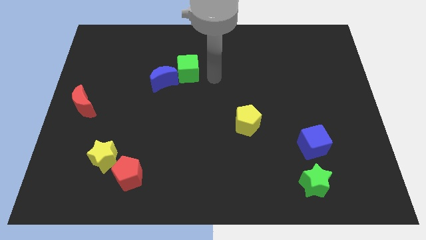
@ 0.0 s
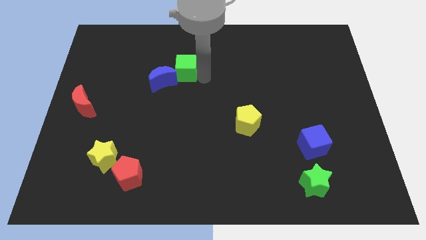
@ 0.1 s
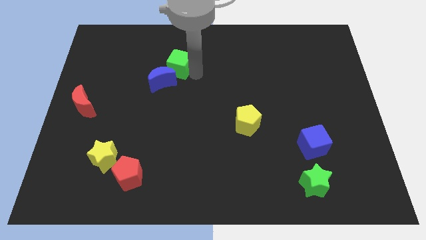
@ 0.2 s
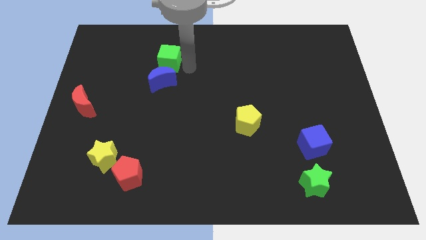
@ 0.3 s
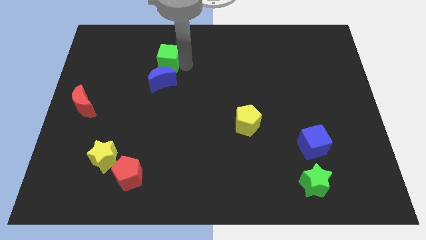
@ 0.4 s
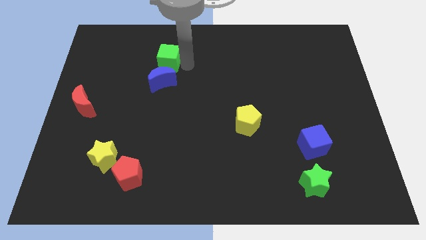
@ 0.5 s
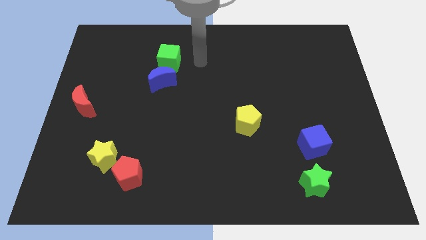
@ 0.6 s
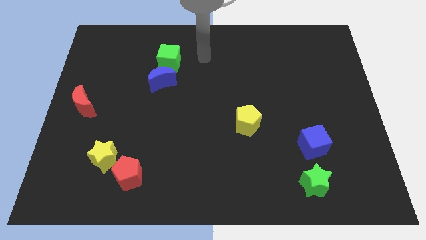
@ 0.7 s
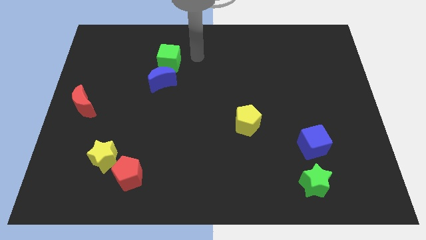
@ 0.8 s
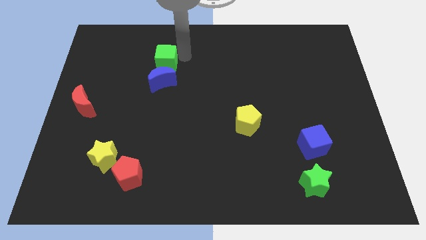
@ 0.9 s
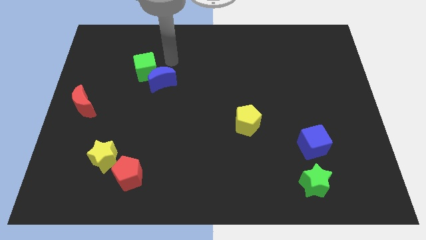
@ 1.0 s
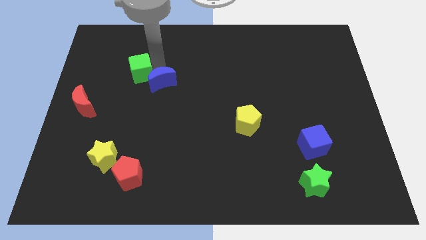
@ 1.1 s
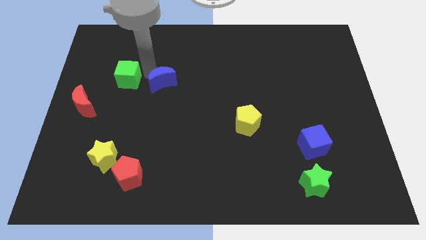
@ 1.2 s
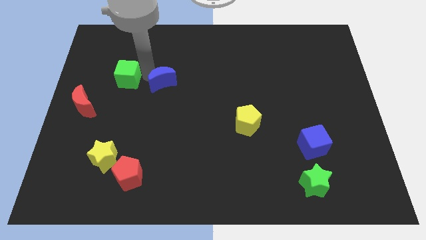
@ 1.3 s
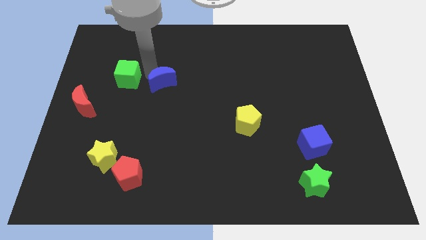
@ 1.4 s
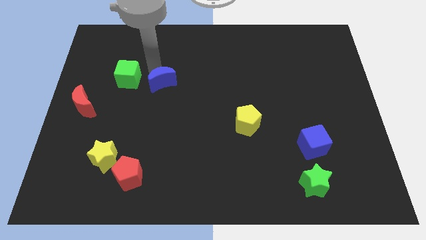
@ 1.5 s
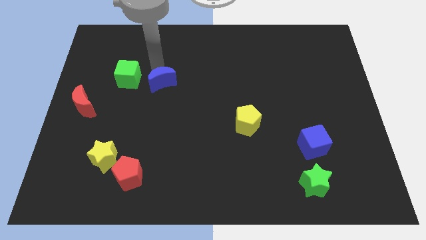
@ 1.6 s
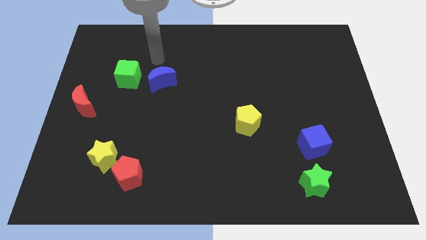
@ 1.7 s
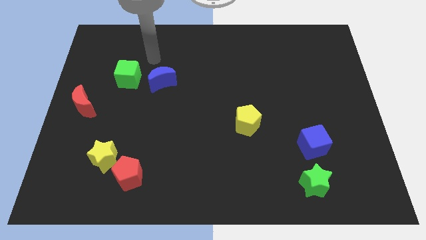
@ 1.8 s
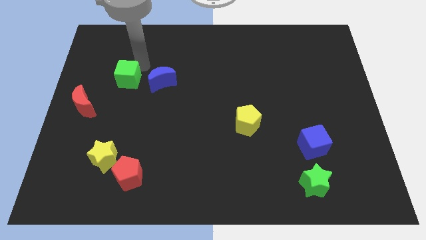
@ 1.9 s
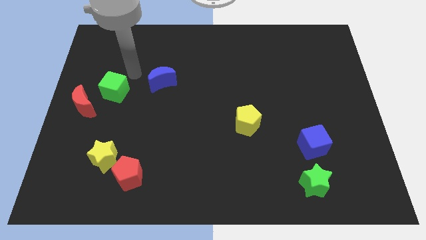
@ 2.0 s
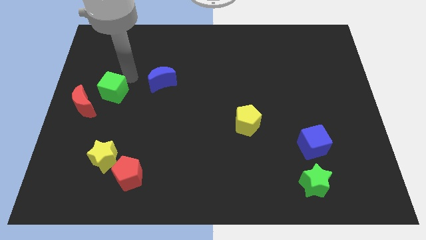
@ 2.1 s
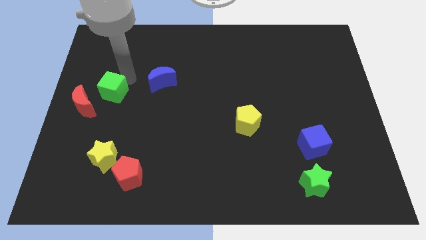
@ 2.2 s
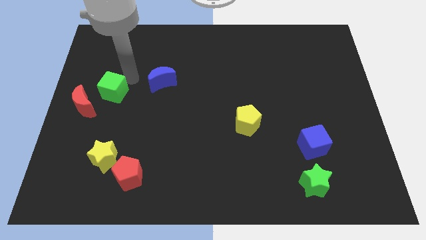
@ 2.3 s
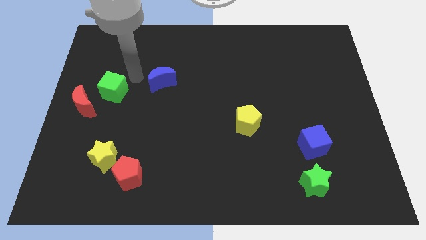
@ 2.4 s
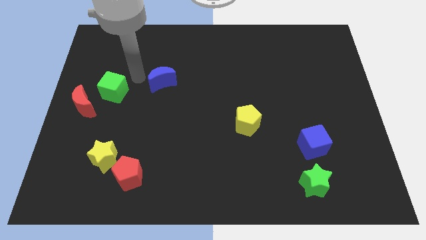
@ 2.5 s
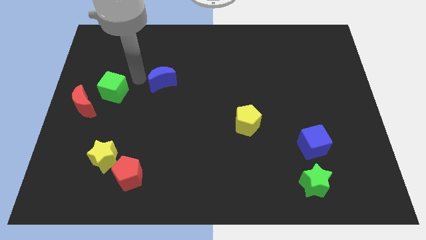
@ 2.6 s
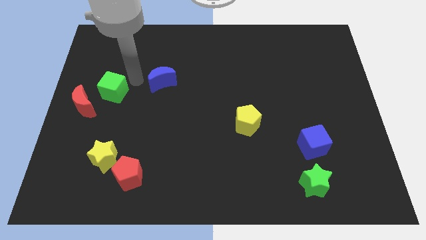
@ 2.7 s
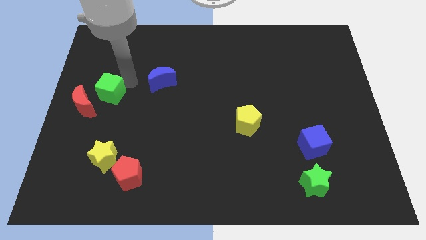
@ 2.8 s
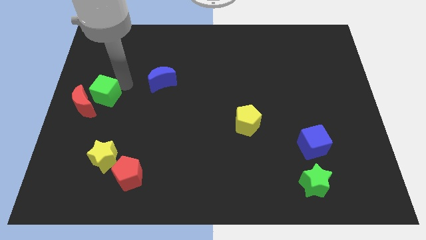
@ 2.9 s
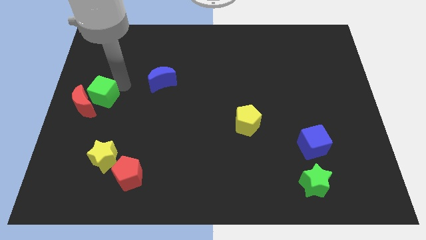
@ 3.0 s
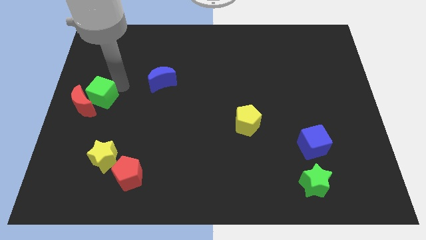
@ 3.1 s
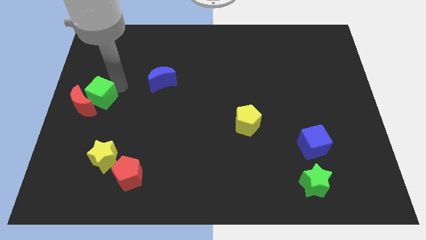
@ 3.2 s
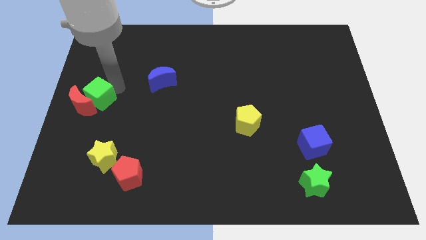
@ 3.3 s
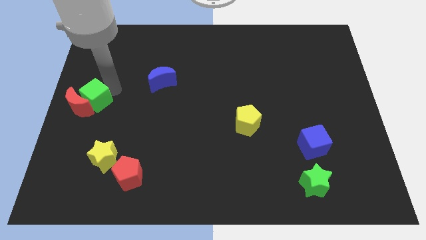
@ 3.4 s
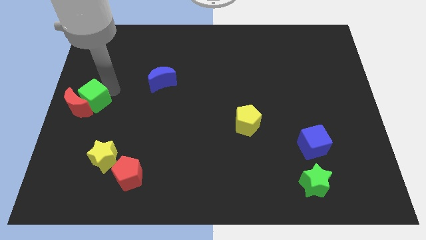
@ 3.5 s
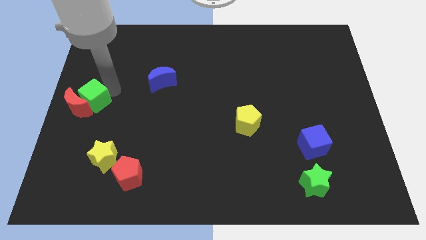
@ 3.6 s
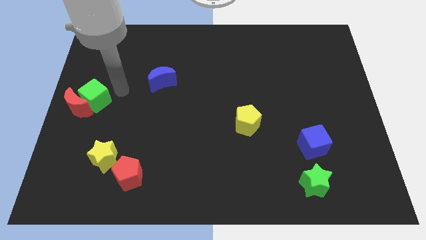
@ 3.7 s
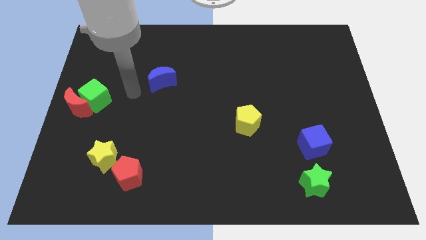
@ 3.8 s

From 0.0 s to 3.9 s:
push the green cube into the red moon

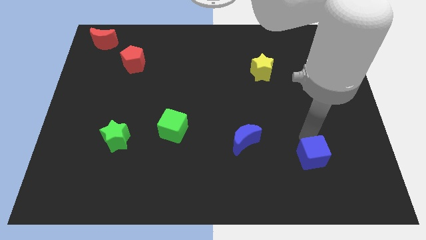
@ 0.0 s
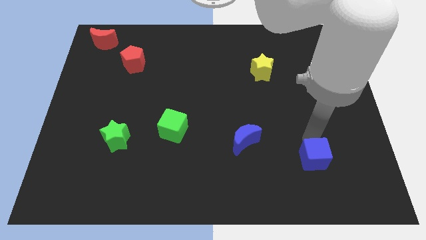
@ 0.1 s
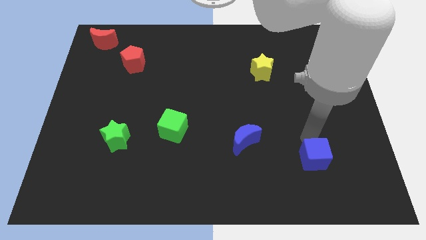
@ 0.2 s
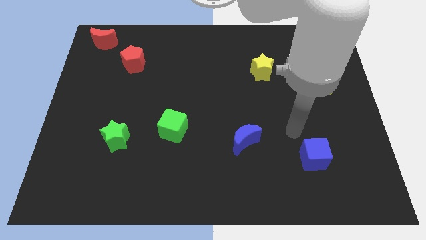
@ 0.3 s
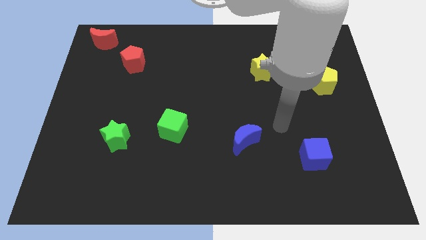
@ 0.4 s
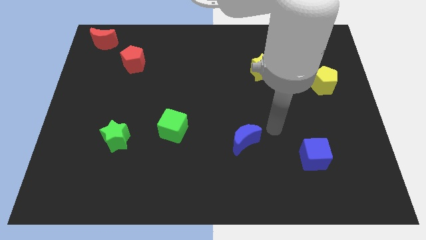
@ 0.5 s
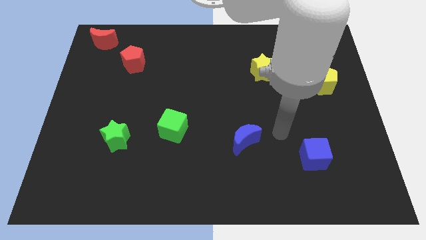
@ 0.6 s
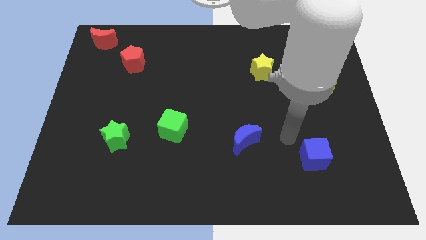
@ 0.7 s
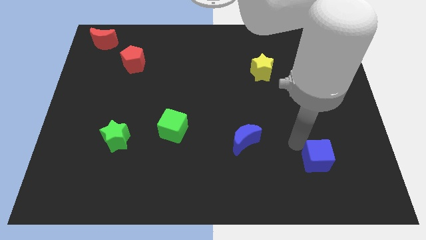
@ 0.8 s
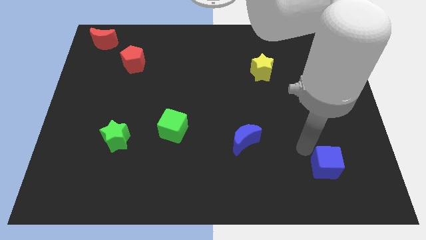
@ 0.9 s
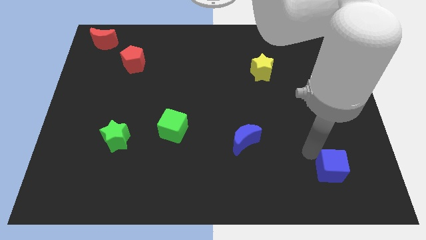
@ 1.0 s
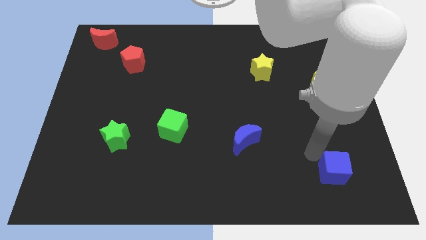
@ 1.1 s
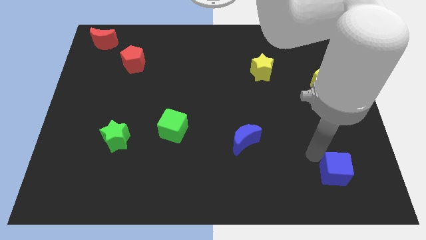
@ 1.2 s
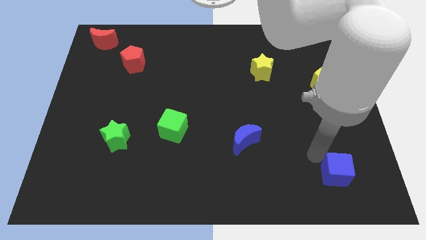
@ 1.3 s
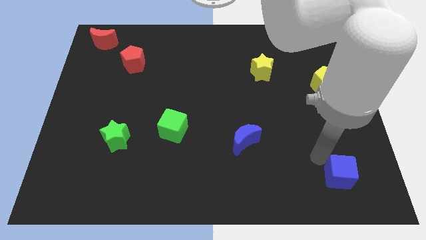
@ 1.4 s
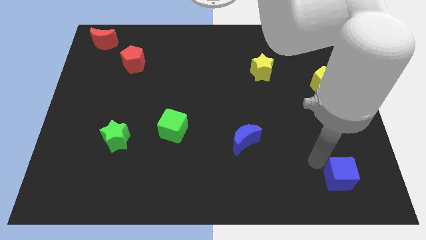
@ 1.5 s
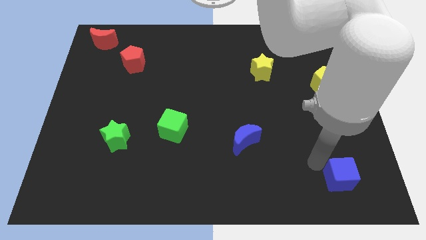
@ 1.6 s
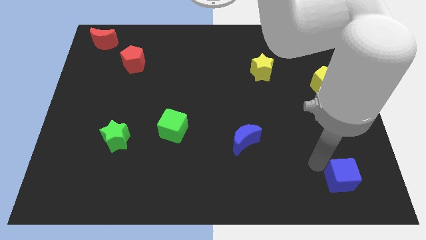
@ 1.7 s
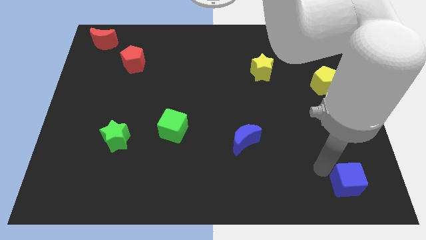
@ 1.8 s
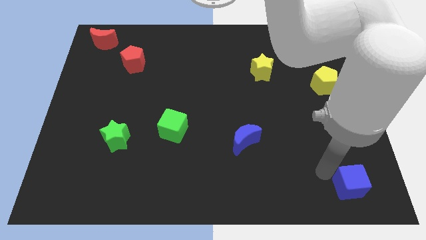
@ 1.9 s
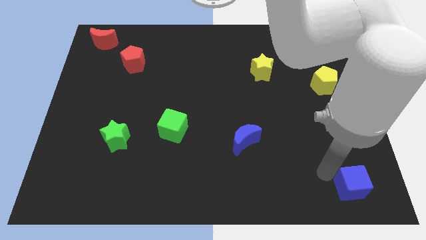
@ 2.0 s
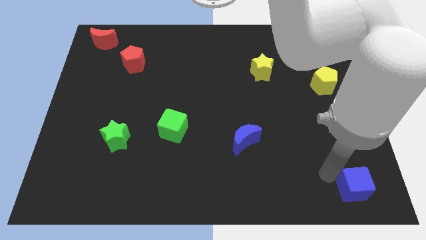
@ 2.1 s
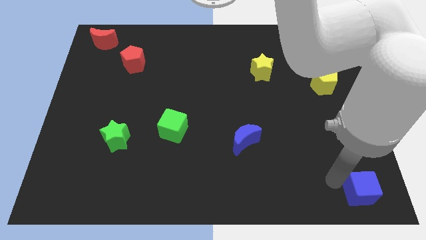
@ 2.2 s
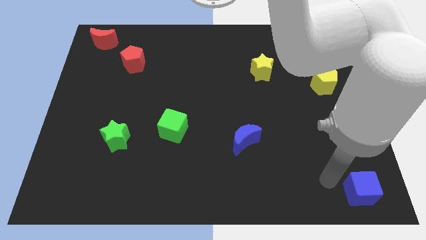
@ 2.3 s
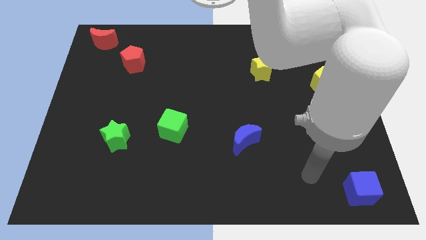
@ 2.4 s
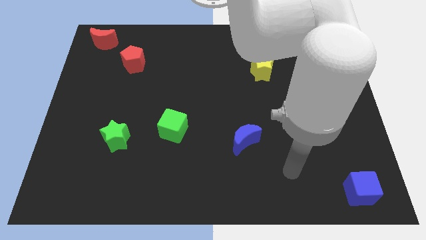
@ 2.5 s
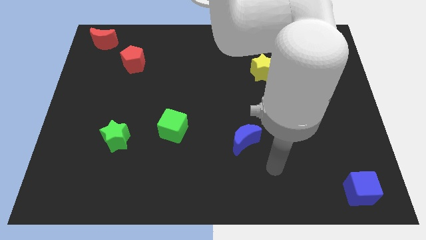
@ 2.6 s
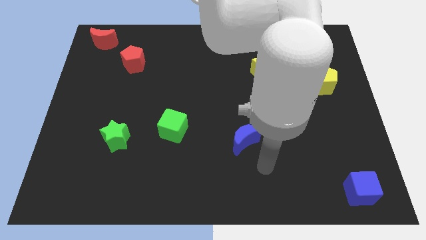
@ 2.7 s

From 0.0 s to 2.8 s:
move the blue cube to the bottom right corner of the board

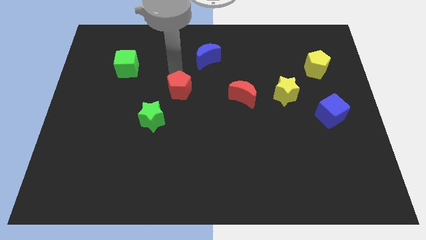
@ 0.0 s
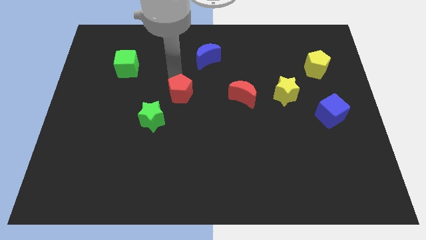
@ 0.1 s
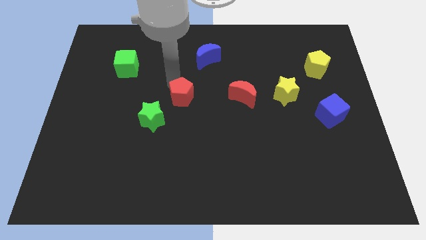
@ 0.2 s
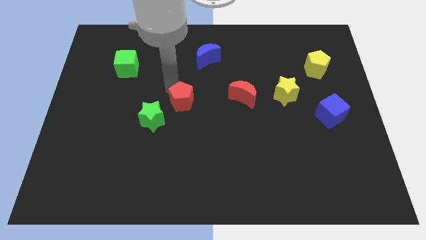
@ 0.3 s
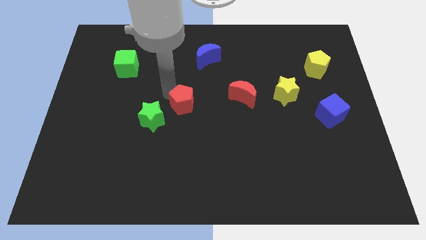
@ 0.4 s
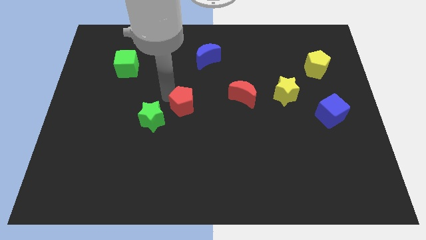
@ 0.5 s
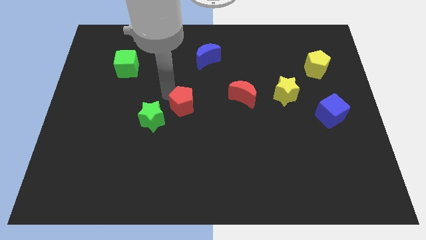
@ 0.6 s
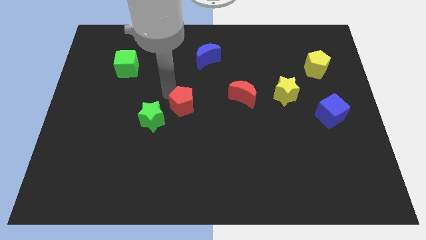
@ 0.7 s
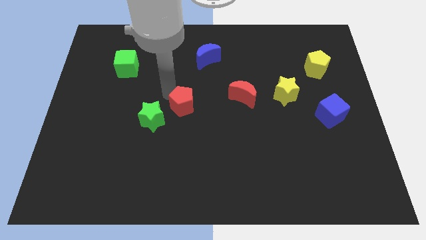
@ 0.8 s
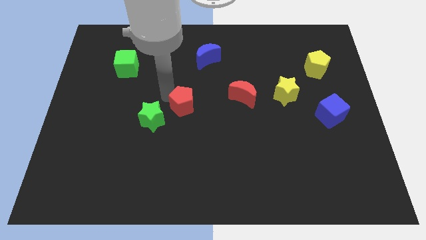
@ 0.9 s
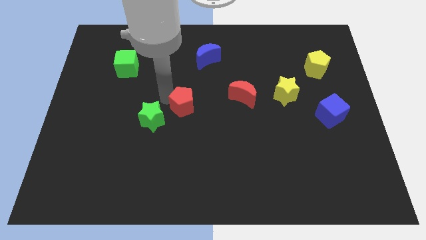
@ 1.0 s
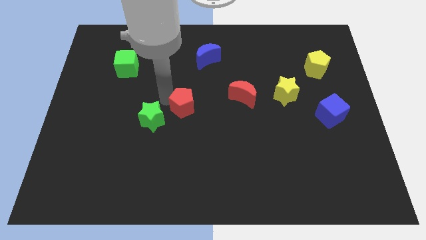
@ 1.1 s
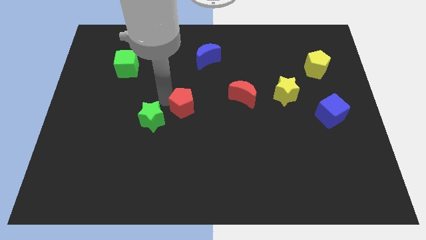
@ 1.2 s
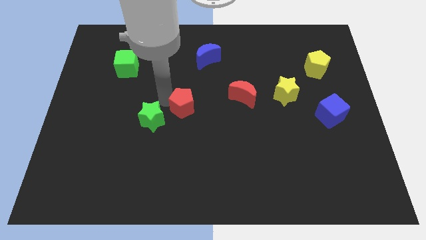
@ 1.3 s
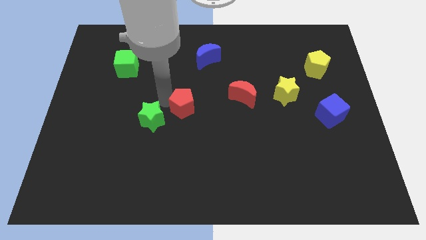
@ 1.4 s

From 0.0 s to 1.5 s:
push the red pentagon slightly towards the bottom

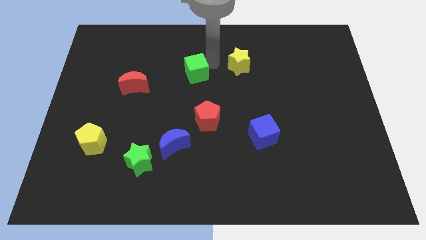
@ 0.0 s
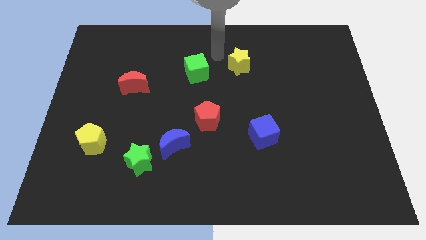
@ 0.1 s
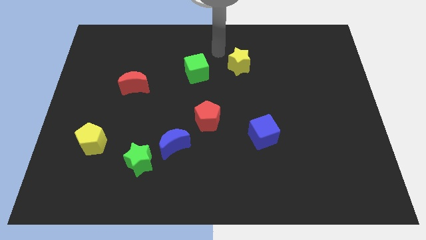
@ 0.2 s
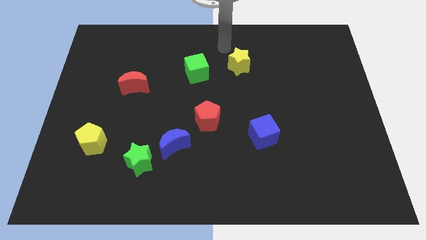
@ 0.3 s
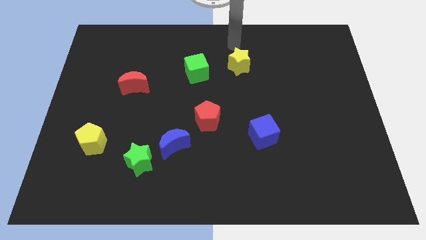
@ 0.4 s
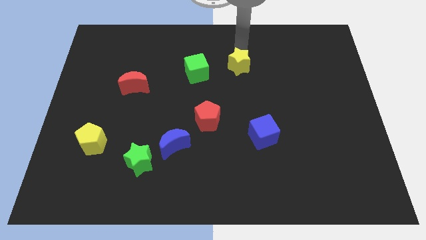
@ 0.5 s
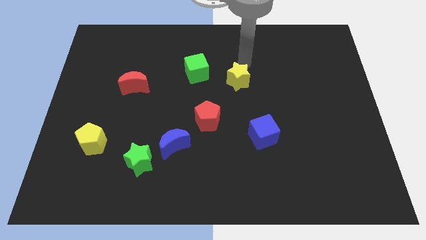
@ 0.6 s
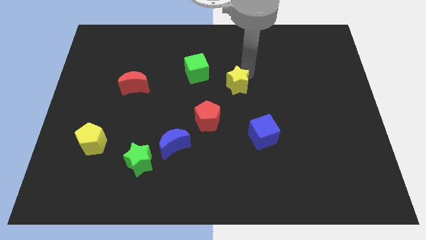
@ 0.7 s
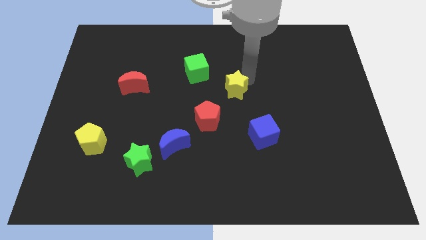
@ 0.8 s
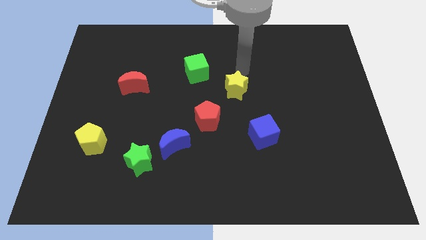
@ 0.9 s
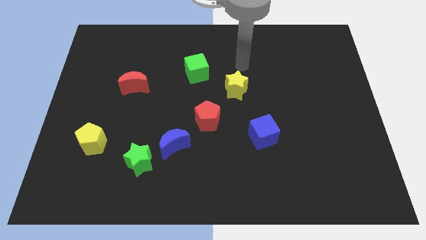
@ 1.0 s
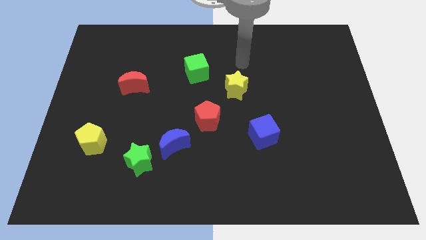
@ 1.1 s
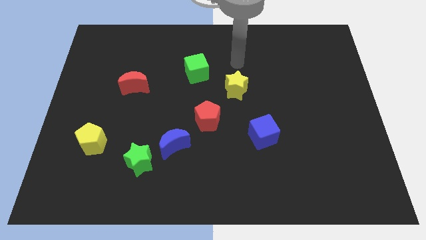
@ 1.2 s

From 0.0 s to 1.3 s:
push the yellow star diagonally to the right of the red pentagon
